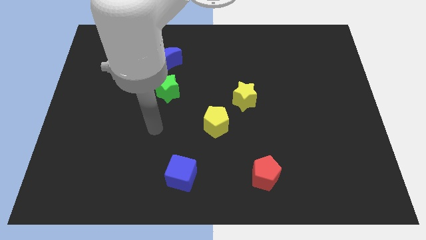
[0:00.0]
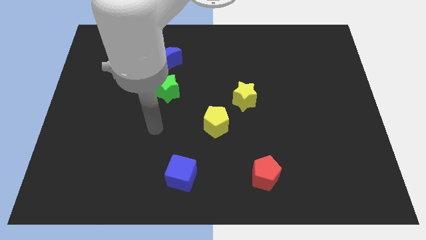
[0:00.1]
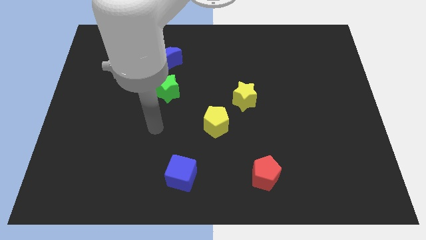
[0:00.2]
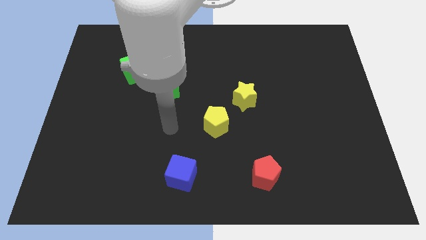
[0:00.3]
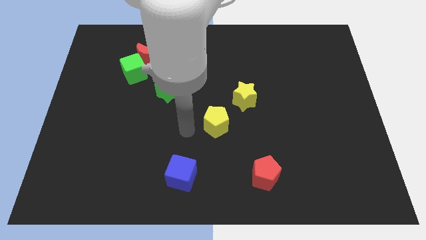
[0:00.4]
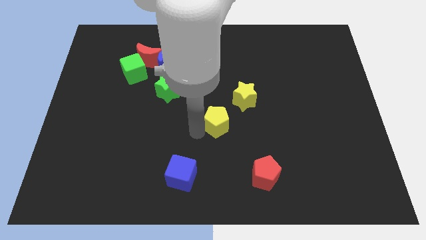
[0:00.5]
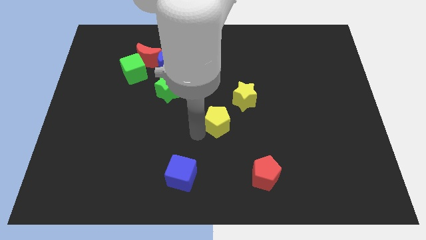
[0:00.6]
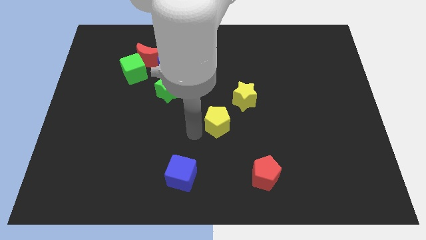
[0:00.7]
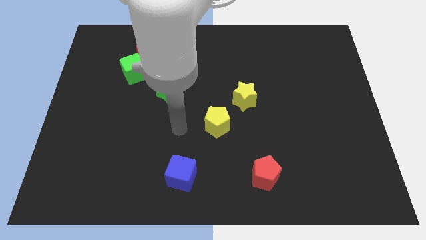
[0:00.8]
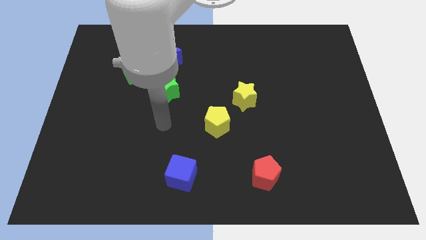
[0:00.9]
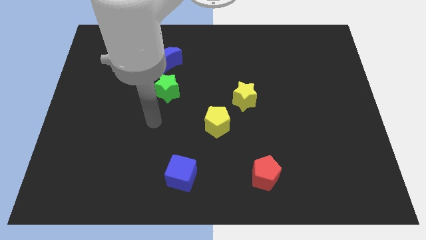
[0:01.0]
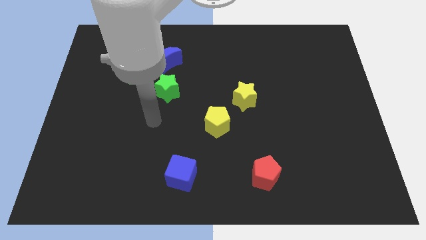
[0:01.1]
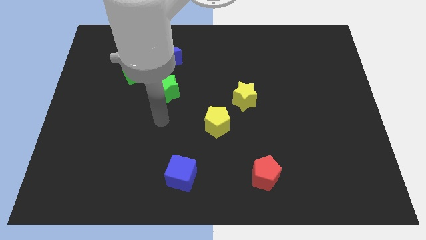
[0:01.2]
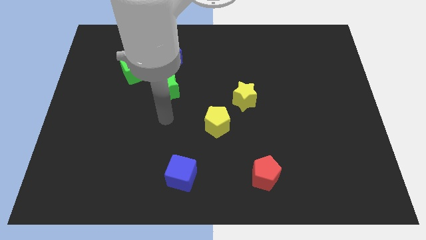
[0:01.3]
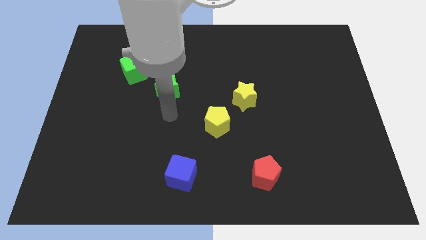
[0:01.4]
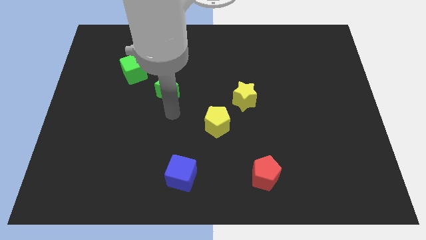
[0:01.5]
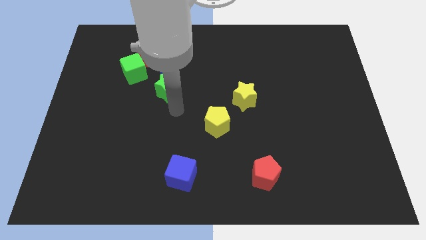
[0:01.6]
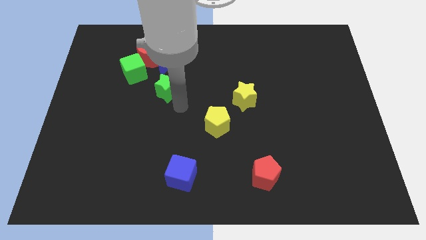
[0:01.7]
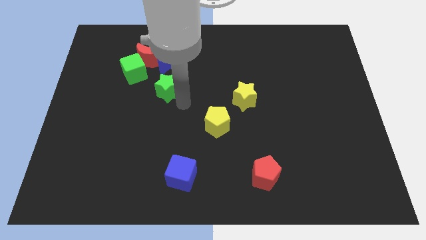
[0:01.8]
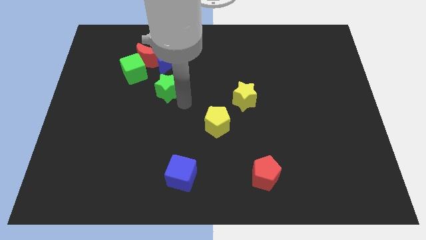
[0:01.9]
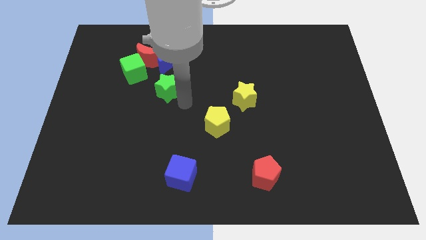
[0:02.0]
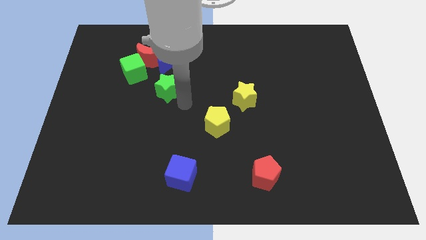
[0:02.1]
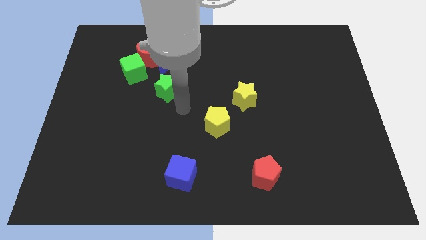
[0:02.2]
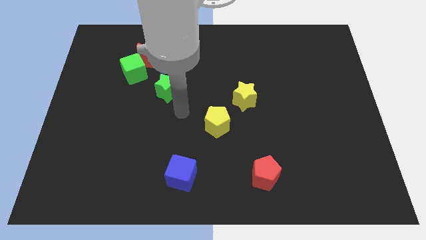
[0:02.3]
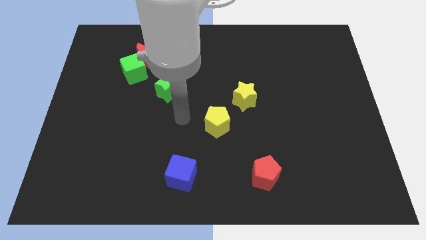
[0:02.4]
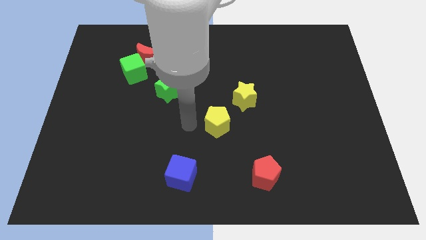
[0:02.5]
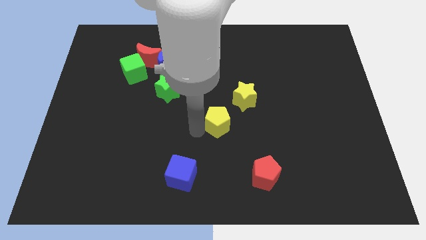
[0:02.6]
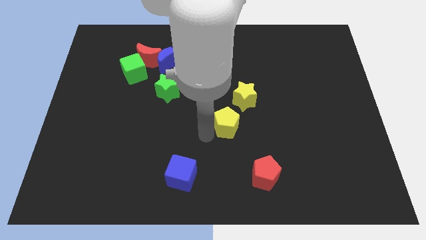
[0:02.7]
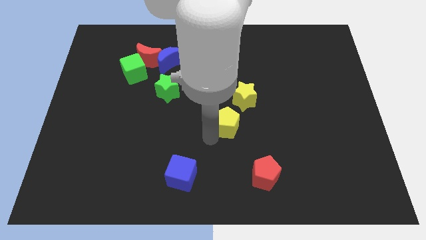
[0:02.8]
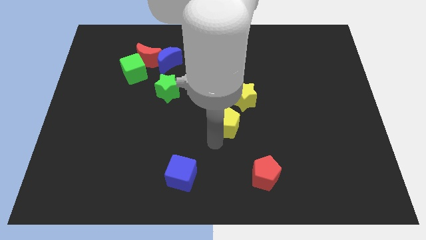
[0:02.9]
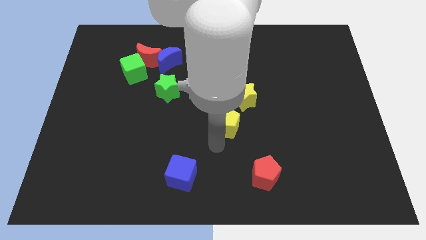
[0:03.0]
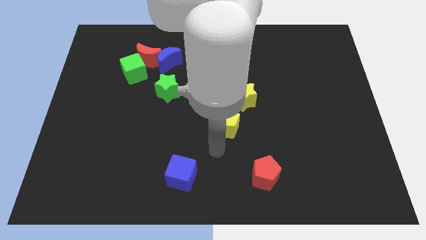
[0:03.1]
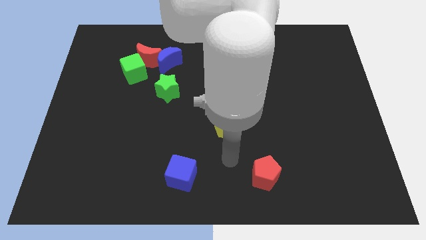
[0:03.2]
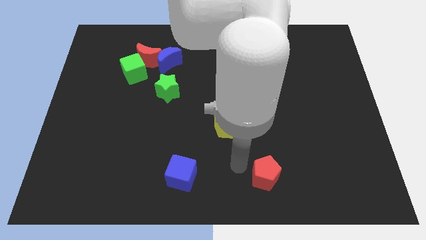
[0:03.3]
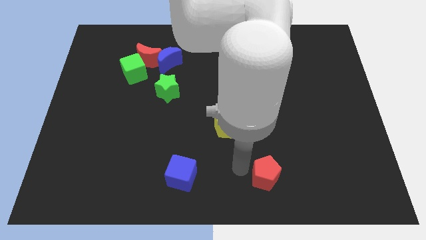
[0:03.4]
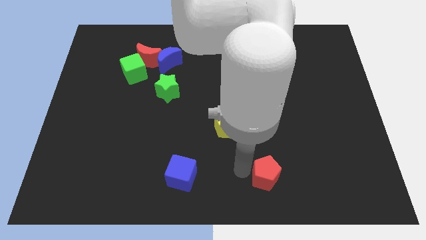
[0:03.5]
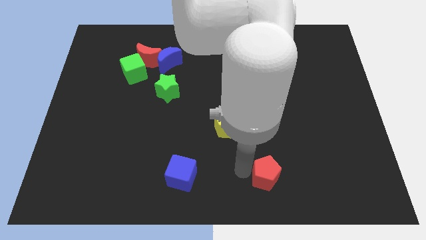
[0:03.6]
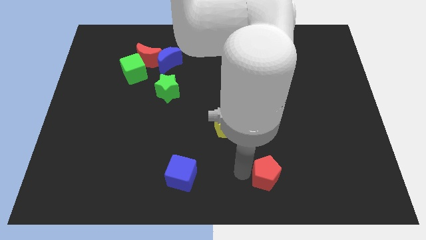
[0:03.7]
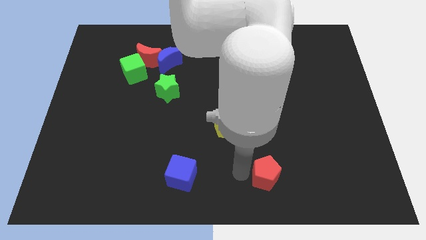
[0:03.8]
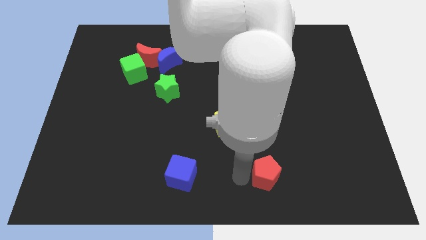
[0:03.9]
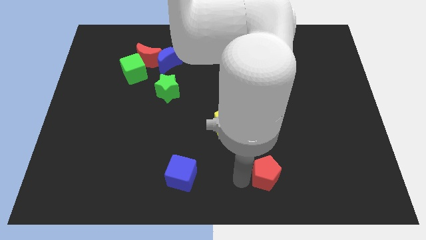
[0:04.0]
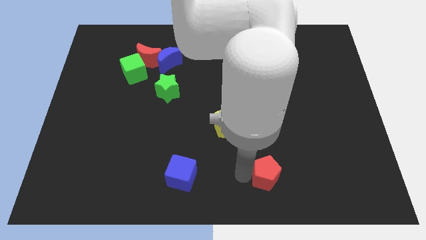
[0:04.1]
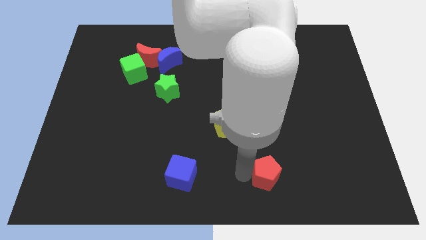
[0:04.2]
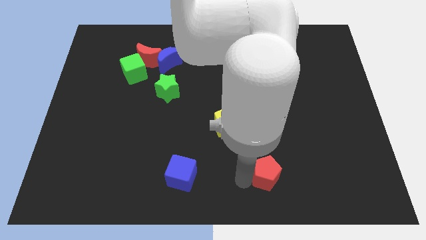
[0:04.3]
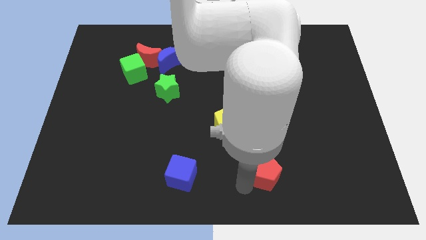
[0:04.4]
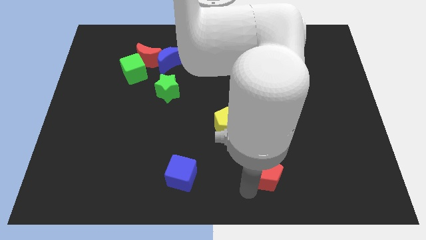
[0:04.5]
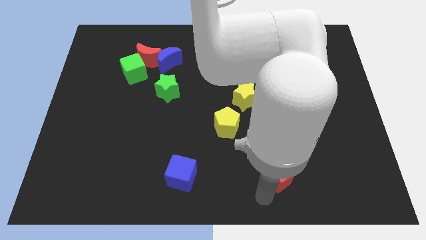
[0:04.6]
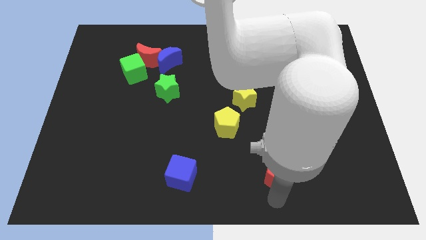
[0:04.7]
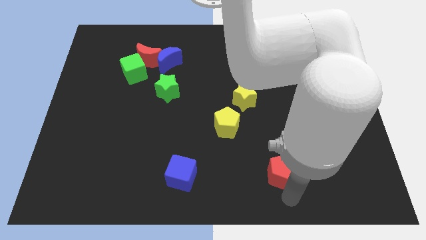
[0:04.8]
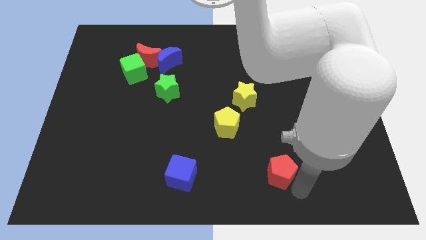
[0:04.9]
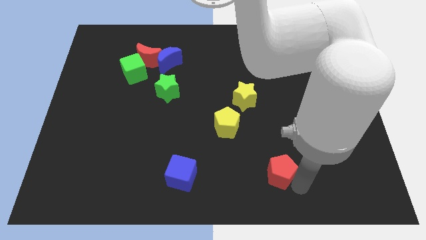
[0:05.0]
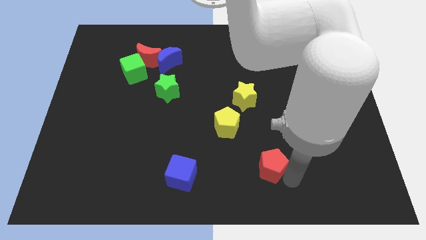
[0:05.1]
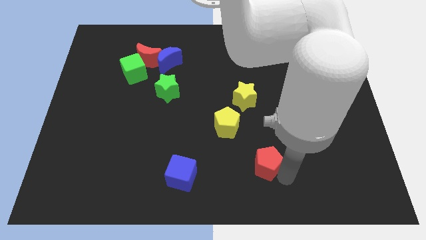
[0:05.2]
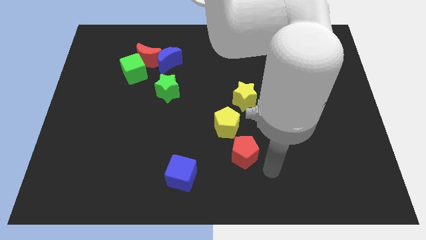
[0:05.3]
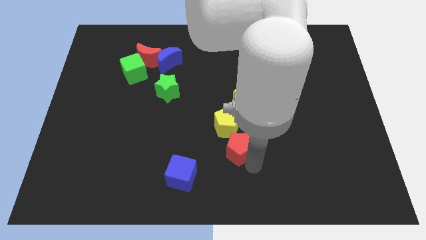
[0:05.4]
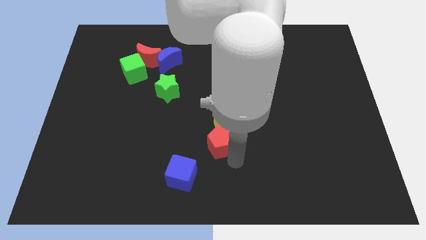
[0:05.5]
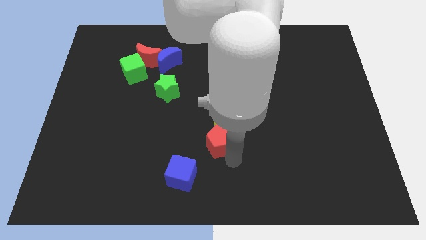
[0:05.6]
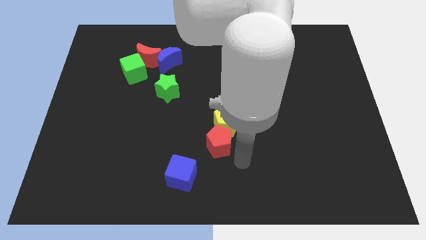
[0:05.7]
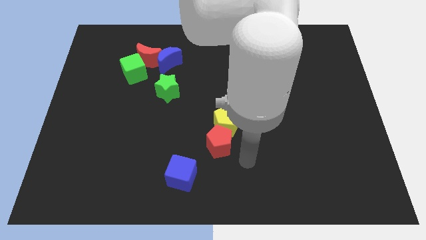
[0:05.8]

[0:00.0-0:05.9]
push the red pentagon close to the yellow pentagon

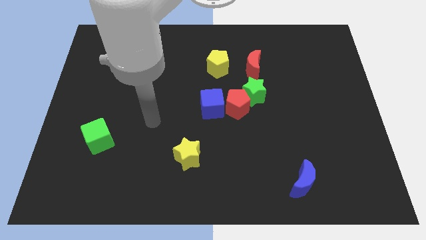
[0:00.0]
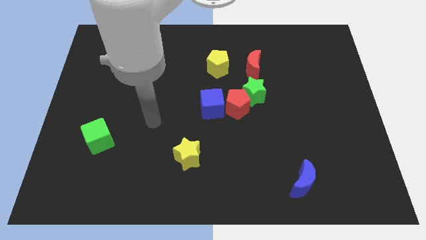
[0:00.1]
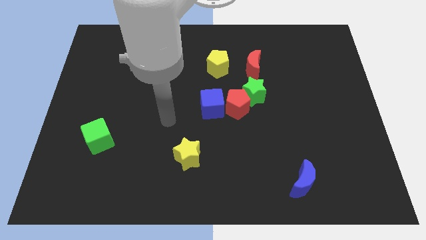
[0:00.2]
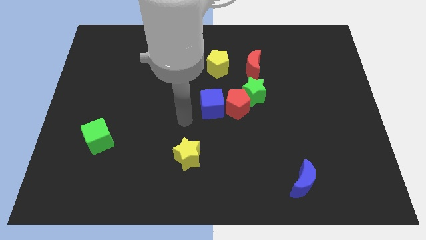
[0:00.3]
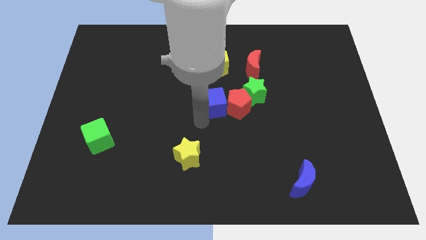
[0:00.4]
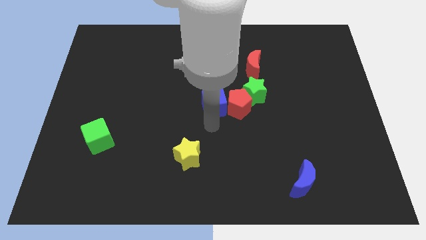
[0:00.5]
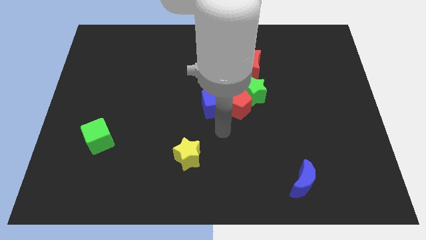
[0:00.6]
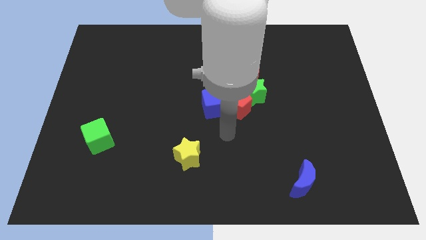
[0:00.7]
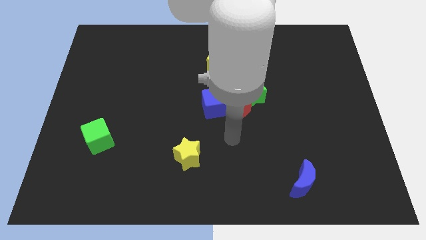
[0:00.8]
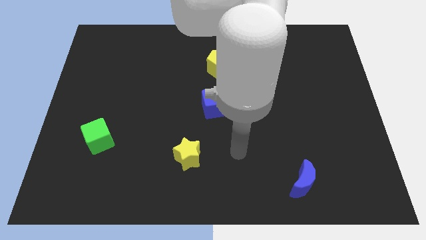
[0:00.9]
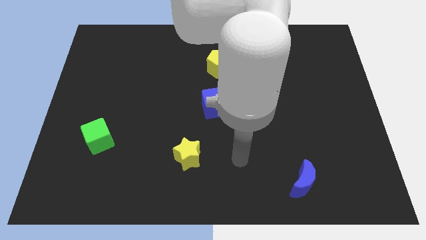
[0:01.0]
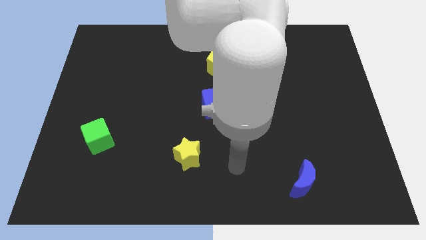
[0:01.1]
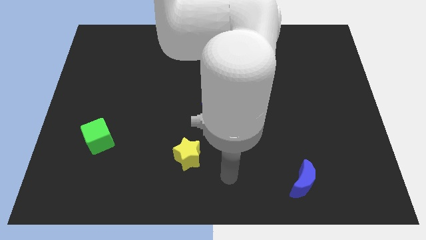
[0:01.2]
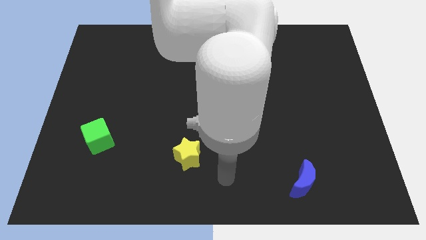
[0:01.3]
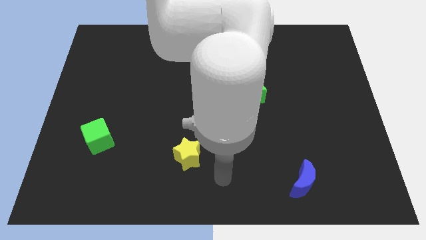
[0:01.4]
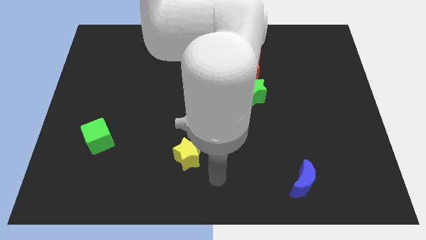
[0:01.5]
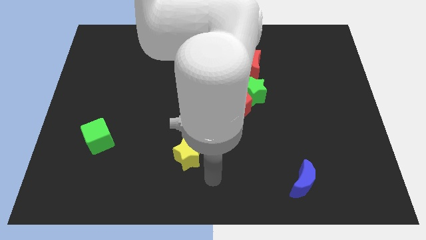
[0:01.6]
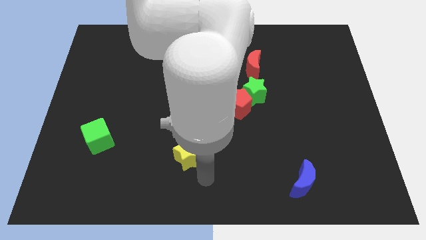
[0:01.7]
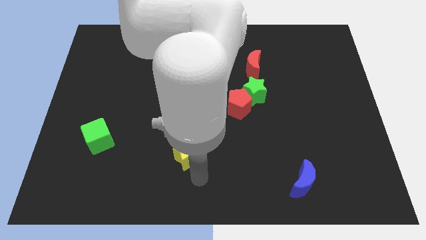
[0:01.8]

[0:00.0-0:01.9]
move the arm to the bottom of the yellow star

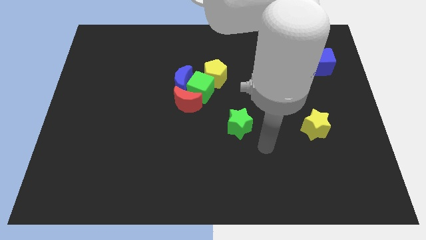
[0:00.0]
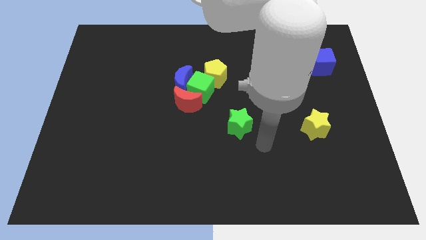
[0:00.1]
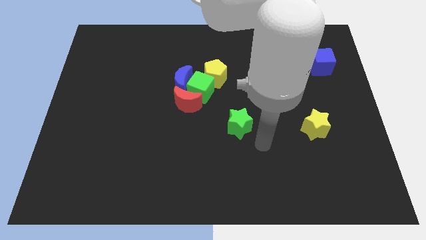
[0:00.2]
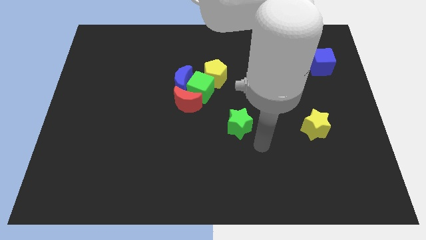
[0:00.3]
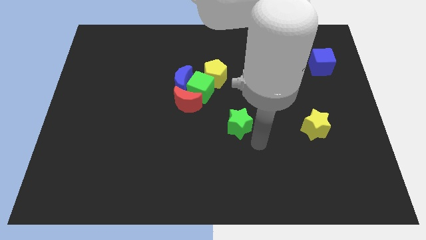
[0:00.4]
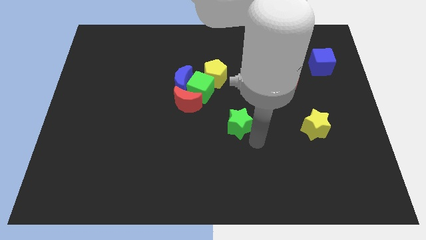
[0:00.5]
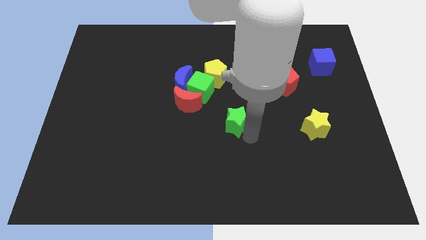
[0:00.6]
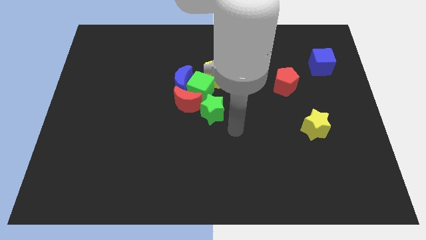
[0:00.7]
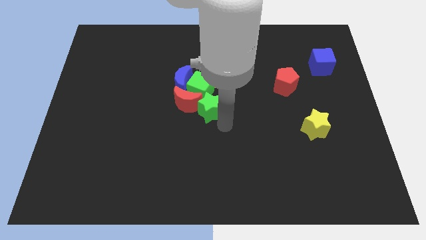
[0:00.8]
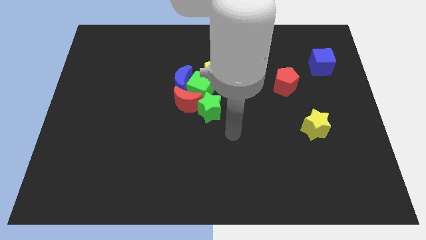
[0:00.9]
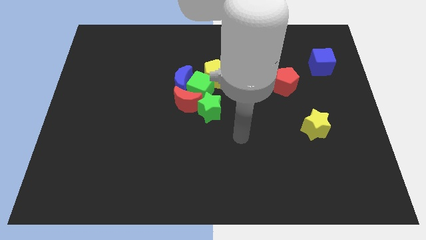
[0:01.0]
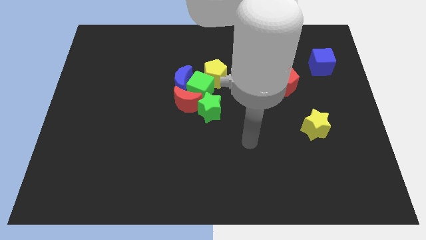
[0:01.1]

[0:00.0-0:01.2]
push the green star close to the green cube
